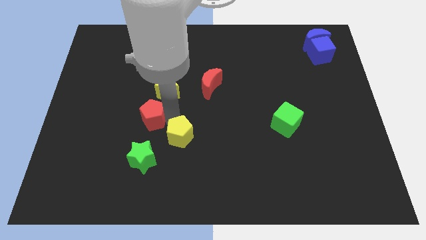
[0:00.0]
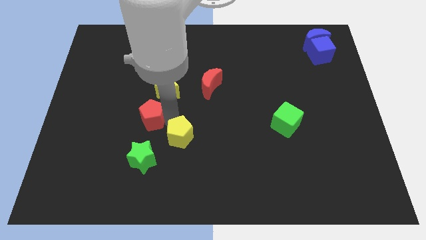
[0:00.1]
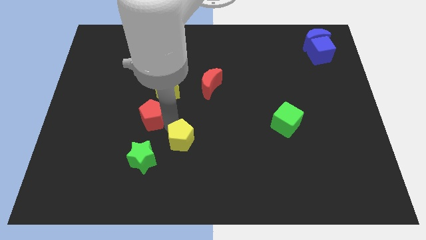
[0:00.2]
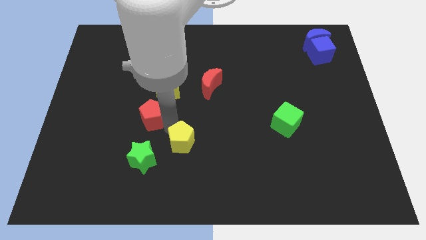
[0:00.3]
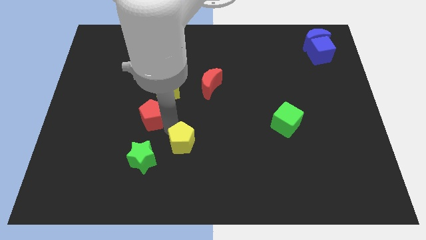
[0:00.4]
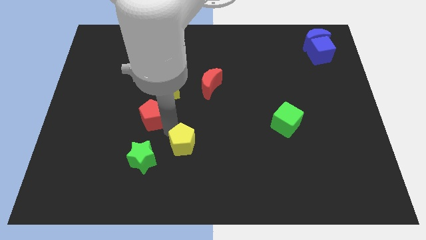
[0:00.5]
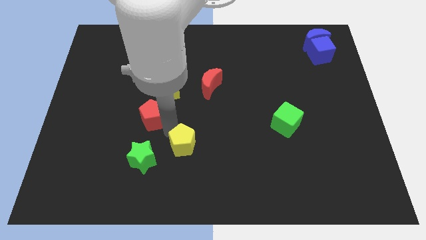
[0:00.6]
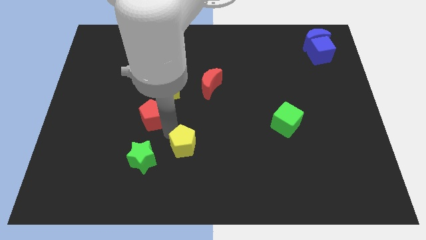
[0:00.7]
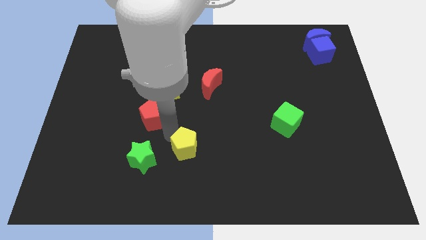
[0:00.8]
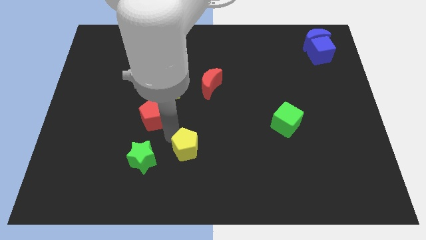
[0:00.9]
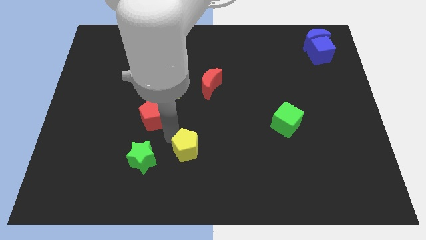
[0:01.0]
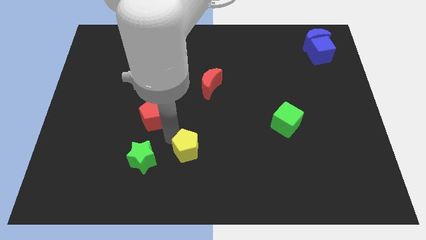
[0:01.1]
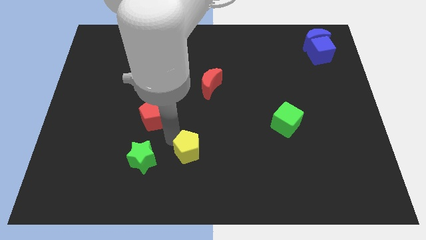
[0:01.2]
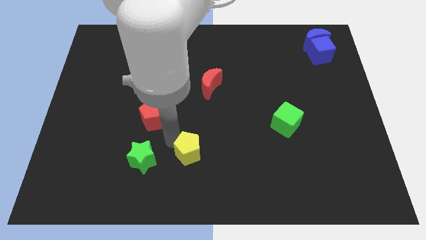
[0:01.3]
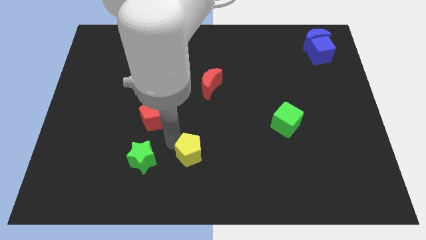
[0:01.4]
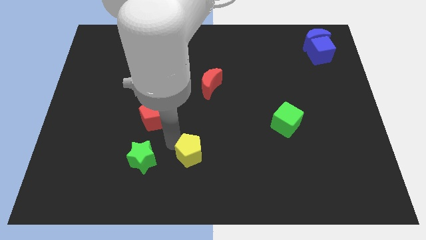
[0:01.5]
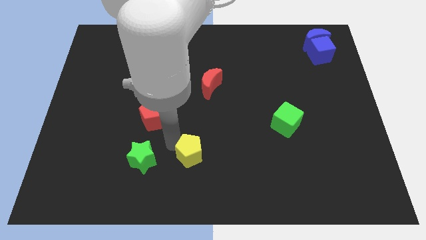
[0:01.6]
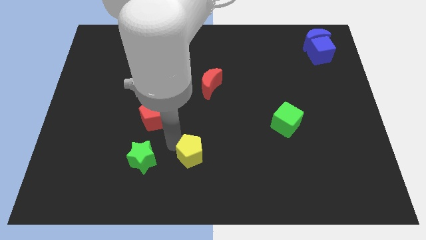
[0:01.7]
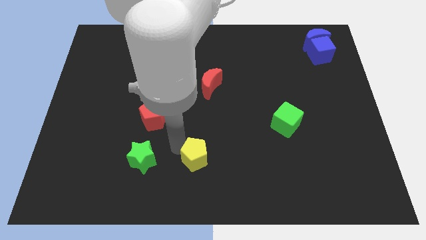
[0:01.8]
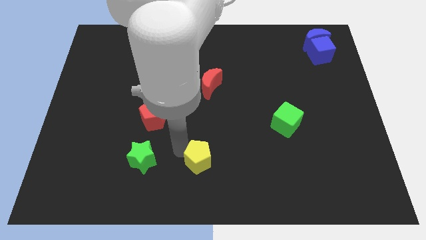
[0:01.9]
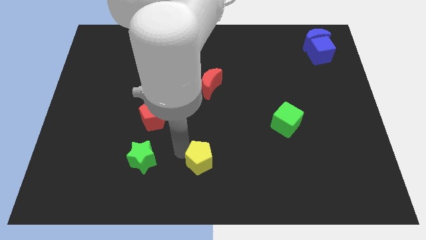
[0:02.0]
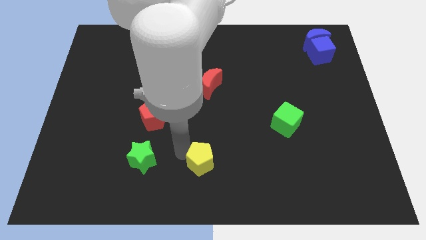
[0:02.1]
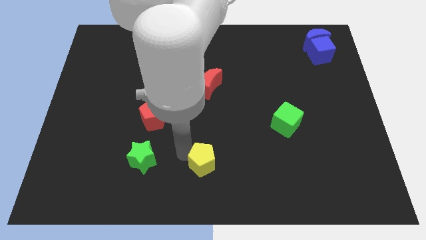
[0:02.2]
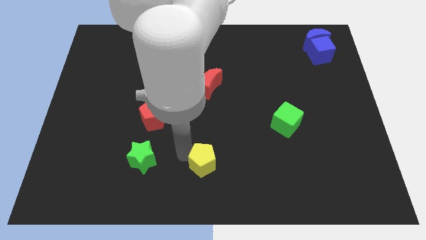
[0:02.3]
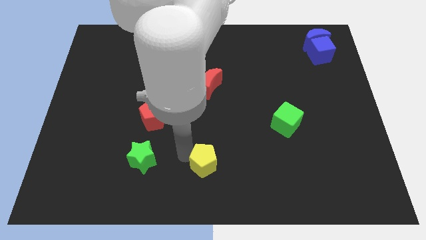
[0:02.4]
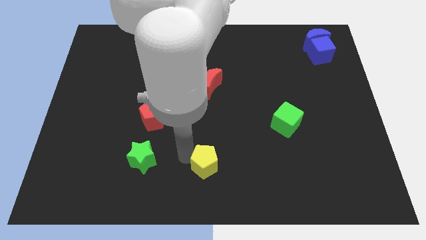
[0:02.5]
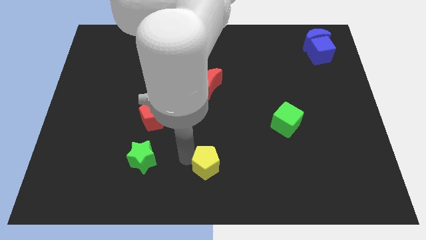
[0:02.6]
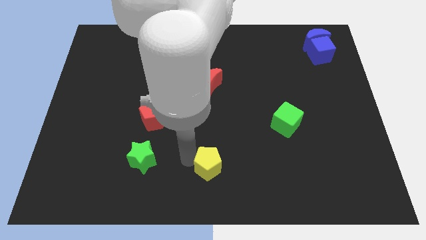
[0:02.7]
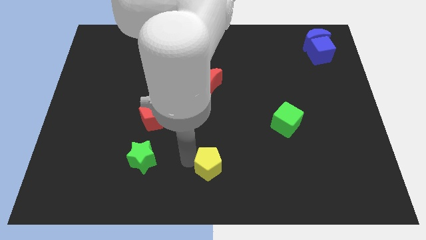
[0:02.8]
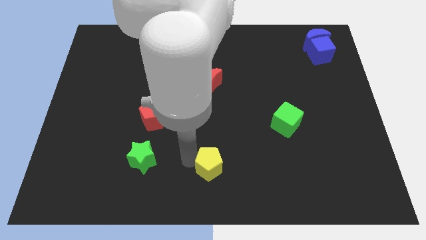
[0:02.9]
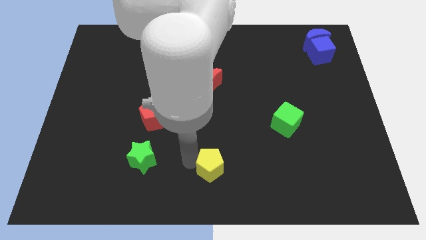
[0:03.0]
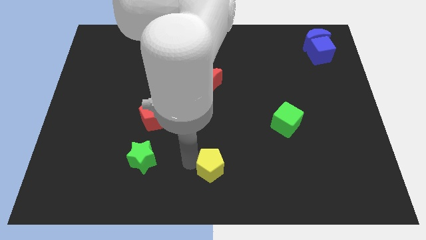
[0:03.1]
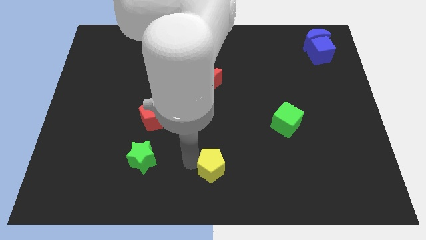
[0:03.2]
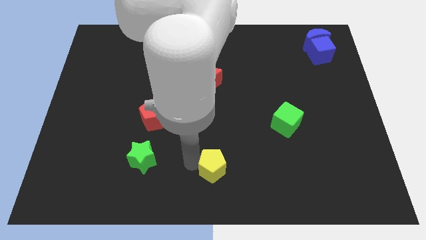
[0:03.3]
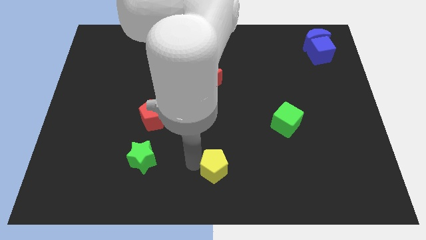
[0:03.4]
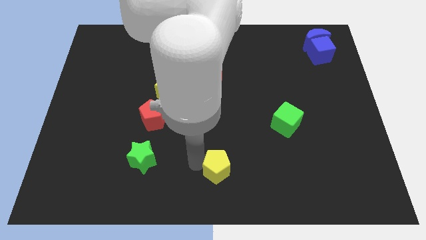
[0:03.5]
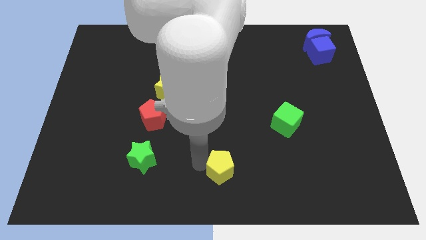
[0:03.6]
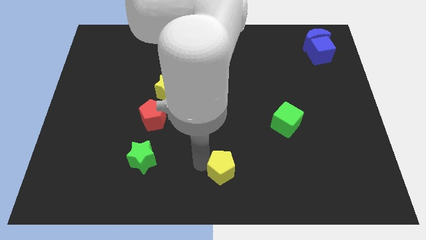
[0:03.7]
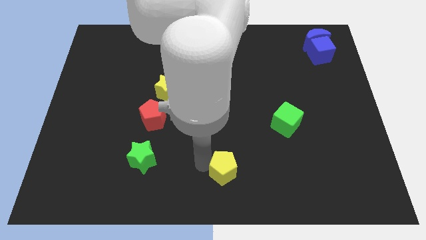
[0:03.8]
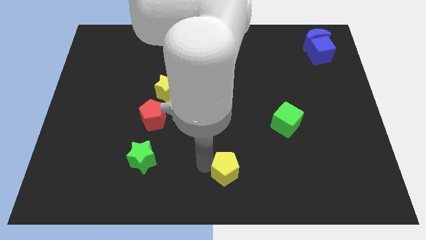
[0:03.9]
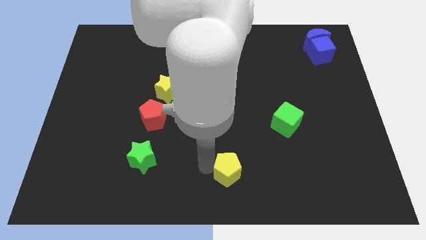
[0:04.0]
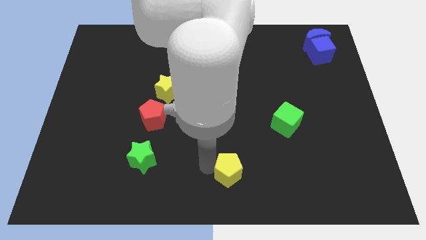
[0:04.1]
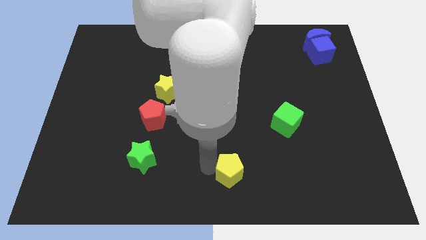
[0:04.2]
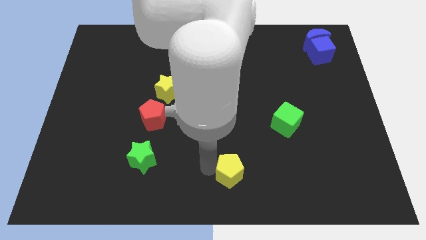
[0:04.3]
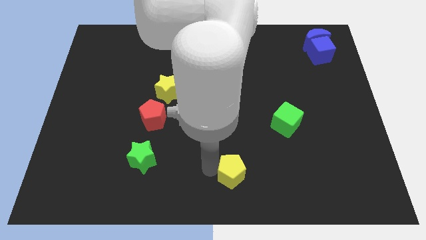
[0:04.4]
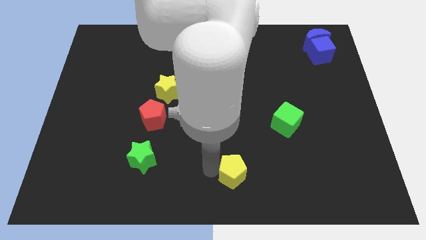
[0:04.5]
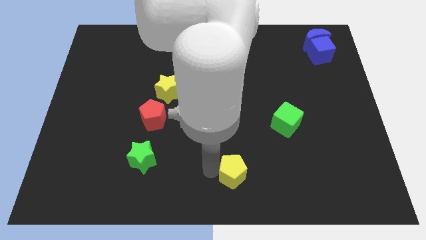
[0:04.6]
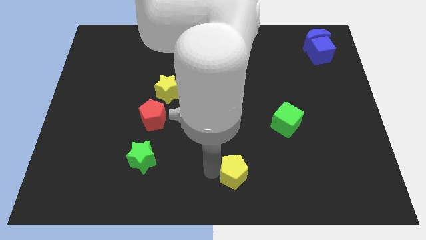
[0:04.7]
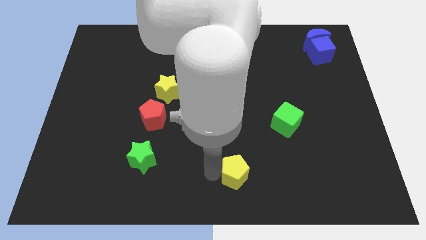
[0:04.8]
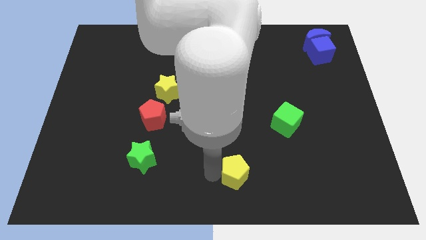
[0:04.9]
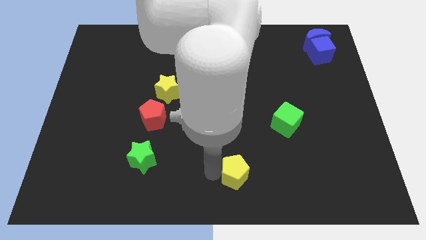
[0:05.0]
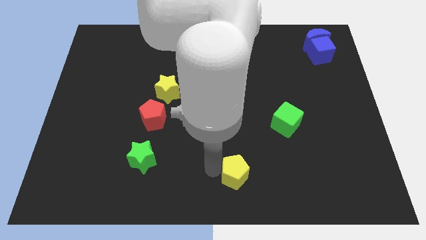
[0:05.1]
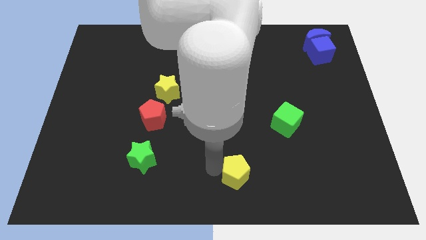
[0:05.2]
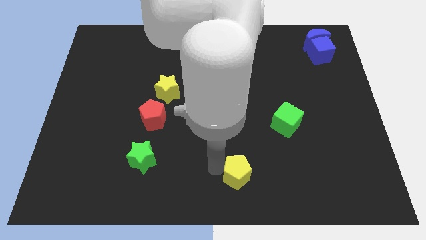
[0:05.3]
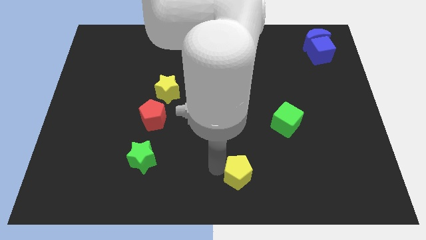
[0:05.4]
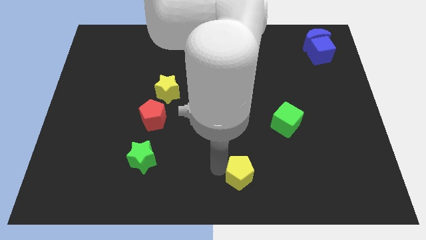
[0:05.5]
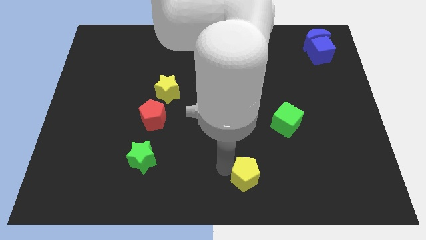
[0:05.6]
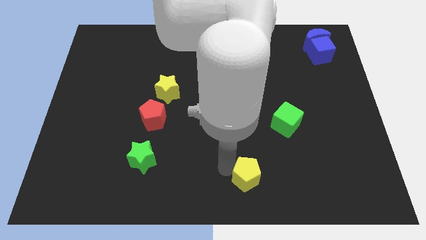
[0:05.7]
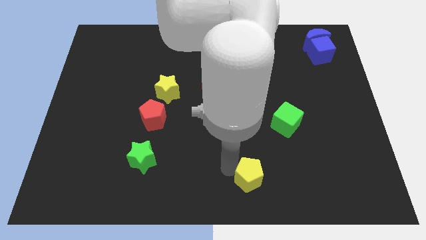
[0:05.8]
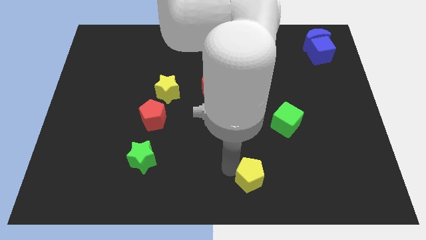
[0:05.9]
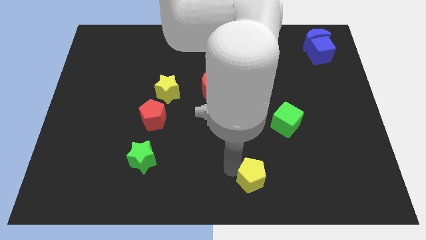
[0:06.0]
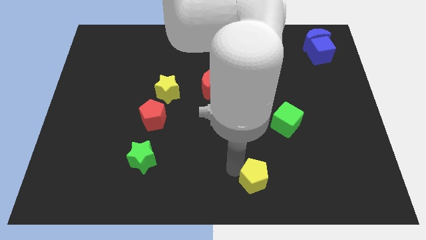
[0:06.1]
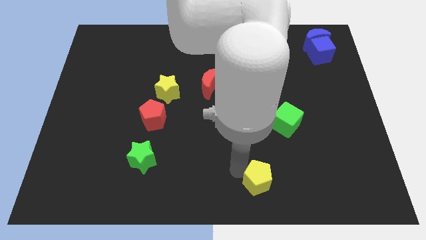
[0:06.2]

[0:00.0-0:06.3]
move the yellow pentagon to the bottom of the board

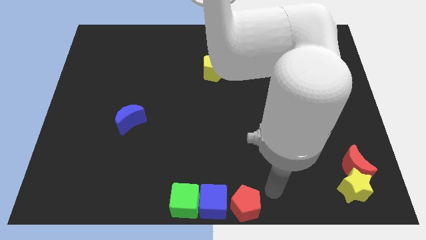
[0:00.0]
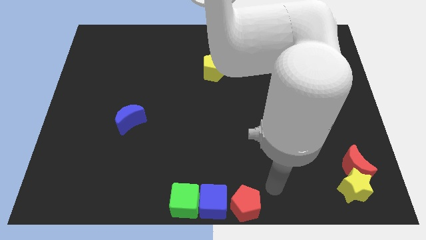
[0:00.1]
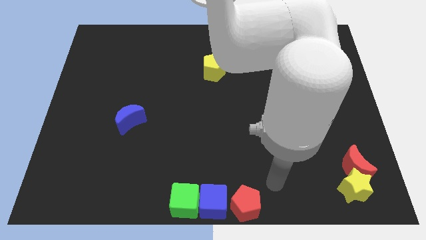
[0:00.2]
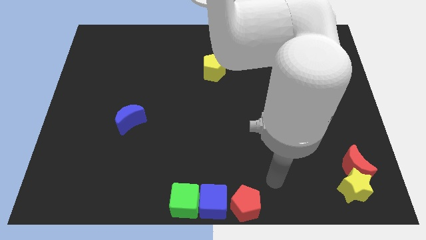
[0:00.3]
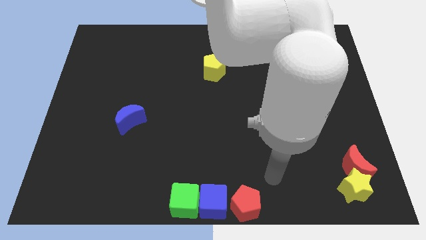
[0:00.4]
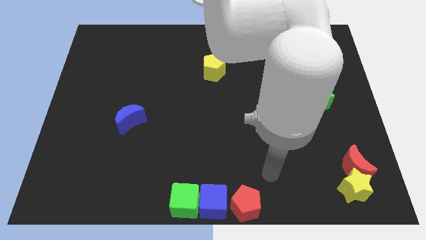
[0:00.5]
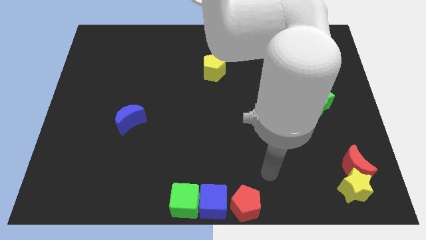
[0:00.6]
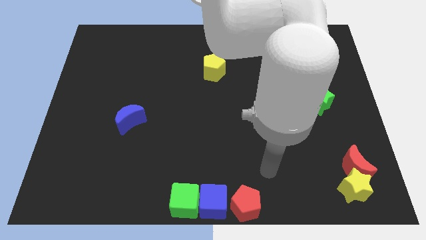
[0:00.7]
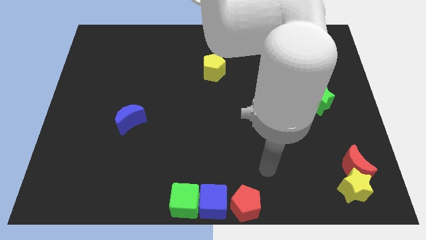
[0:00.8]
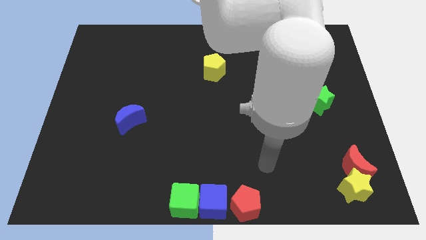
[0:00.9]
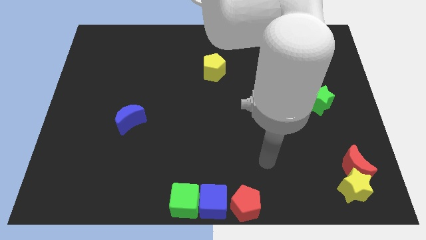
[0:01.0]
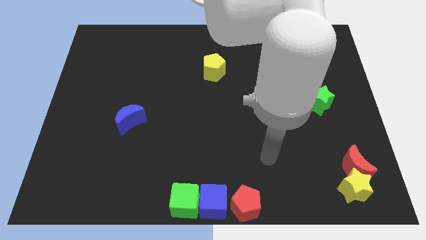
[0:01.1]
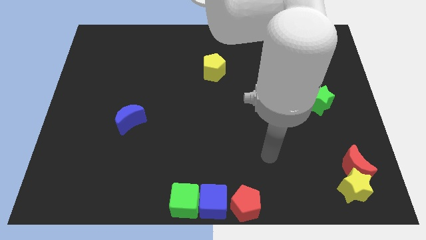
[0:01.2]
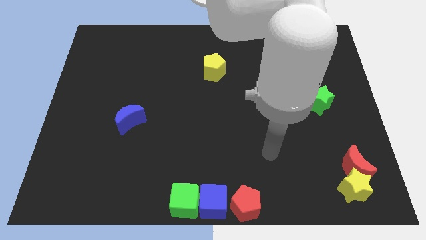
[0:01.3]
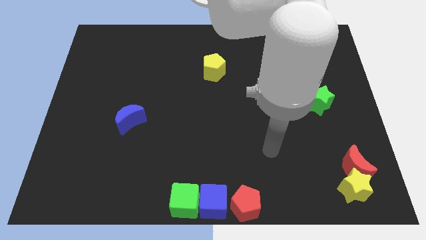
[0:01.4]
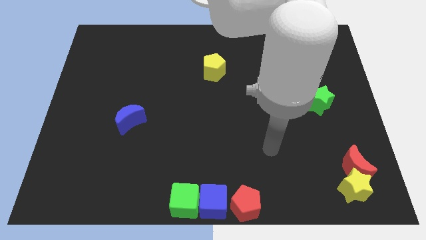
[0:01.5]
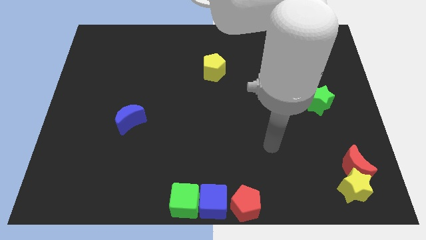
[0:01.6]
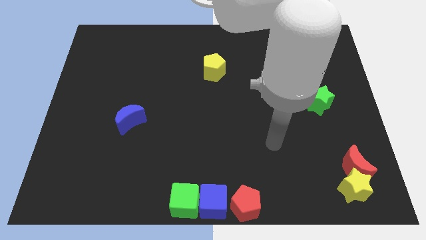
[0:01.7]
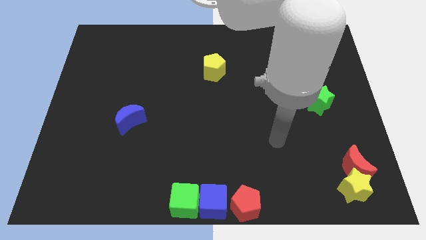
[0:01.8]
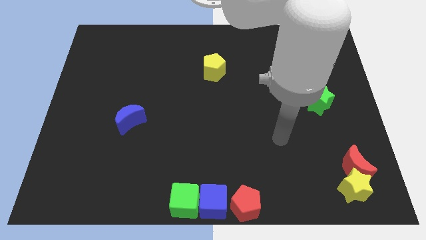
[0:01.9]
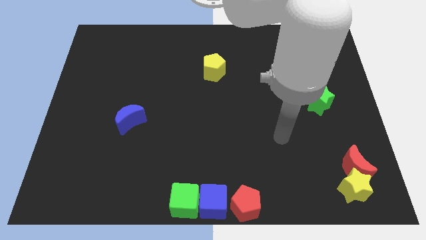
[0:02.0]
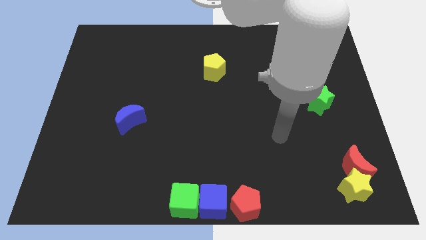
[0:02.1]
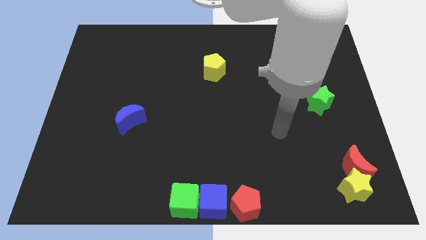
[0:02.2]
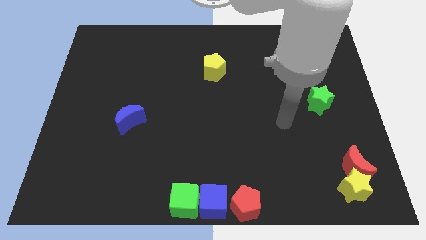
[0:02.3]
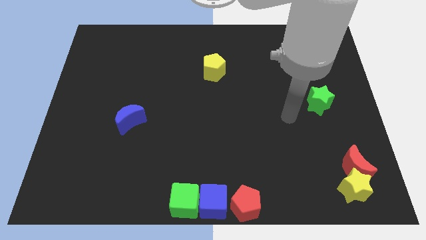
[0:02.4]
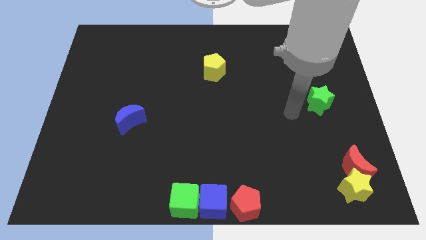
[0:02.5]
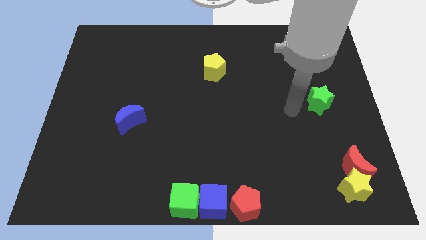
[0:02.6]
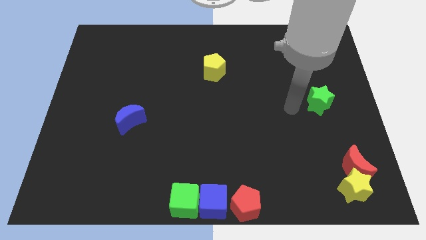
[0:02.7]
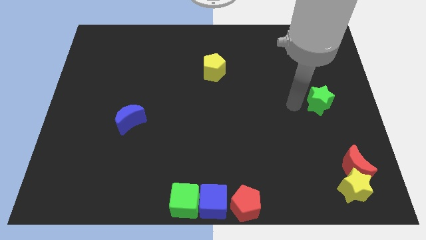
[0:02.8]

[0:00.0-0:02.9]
point your arm left to star green
